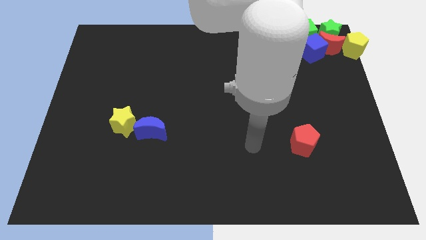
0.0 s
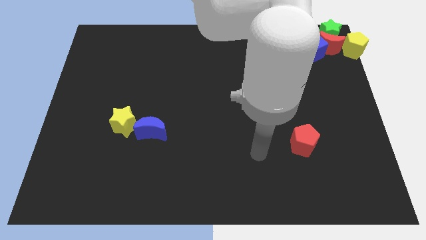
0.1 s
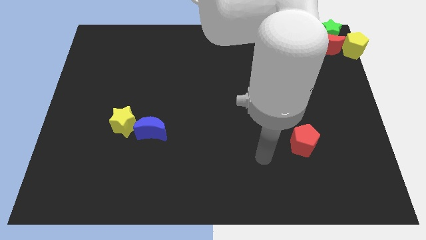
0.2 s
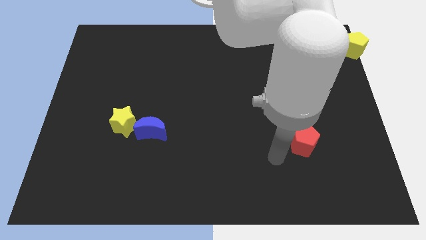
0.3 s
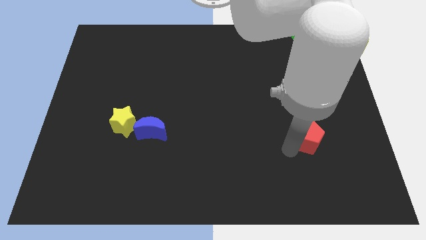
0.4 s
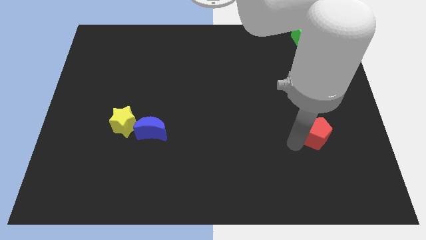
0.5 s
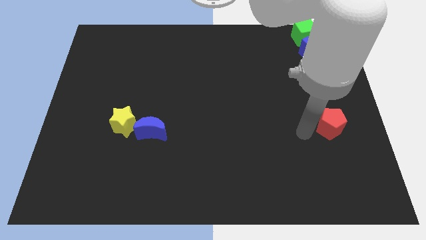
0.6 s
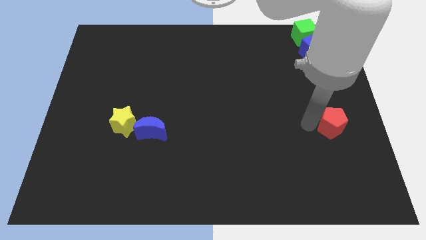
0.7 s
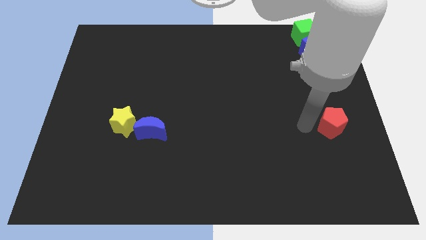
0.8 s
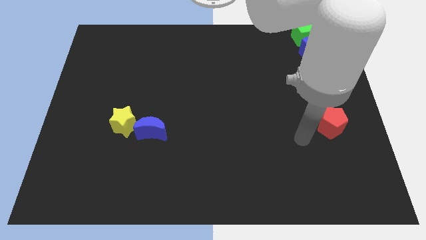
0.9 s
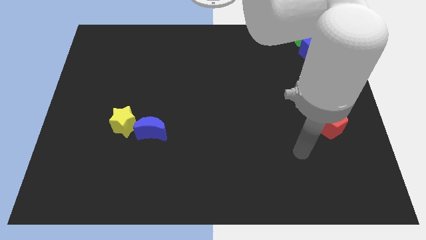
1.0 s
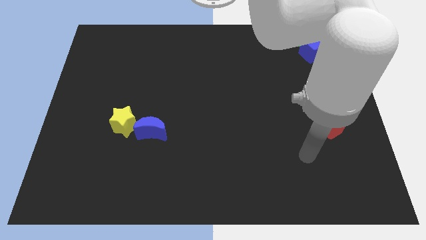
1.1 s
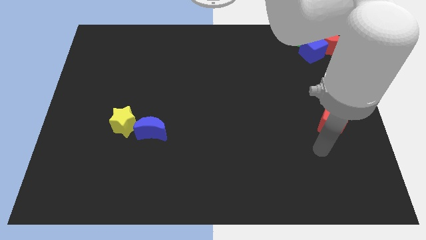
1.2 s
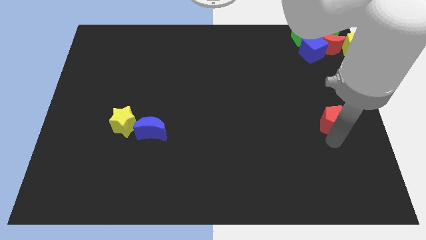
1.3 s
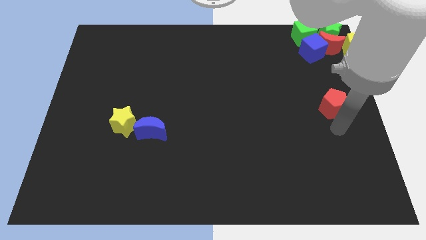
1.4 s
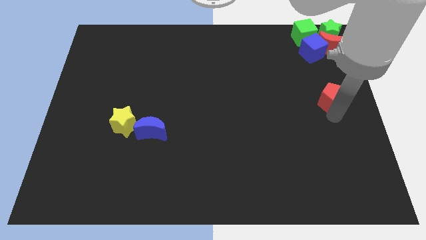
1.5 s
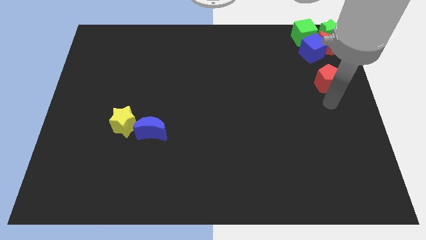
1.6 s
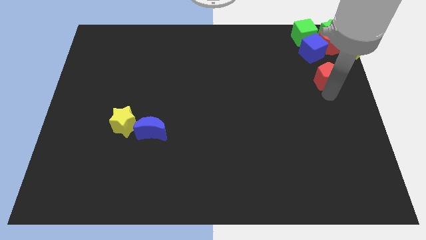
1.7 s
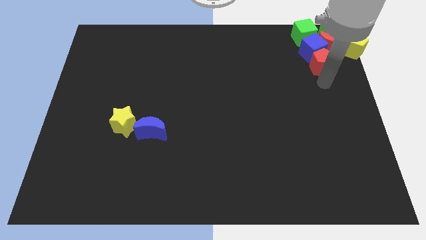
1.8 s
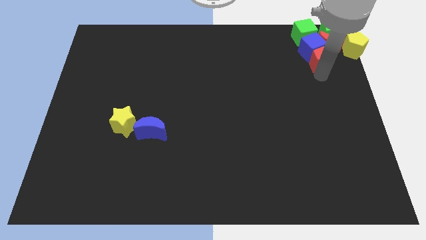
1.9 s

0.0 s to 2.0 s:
place the red pentagon close to the blue cube

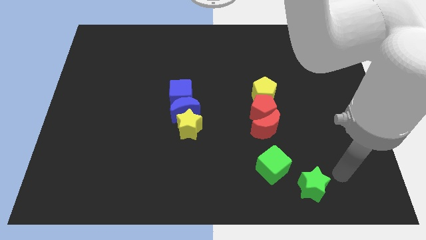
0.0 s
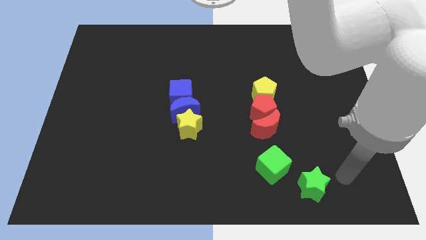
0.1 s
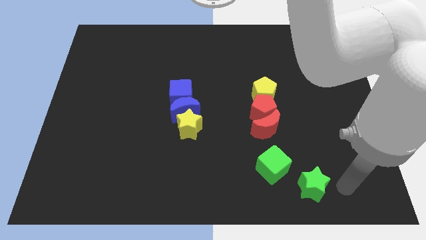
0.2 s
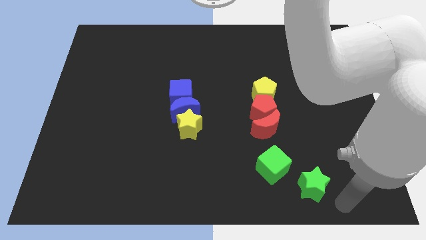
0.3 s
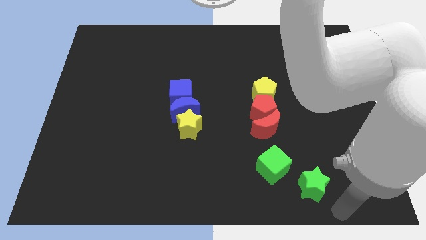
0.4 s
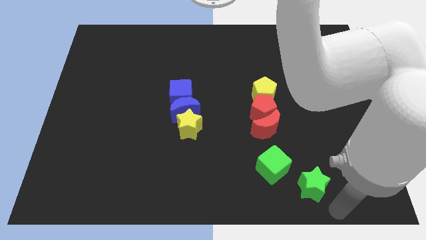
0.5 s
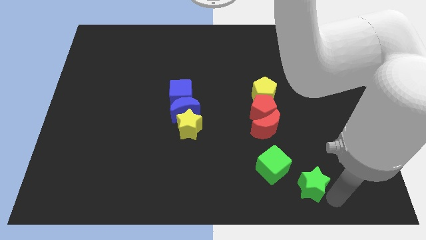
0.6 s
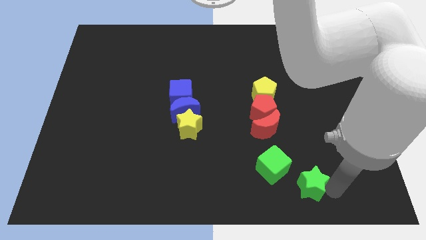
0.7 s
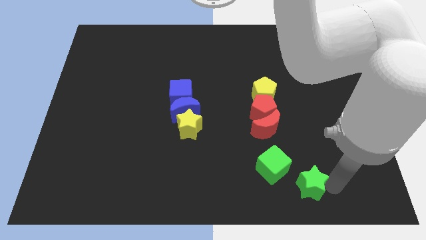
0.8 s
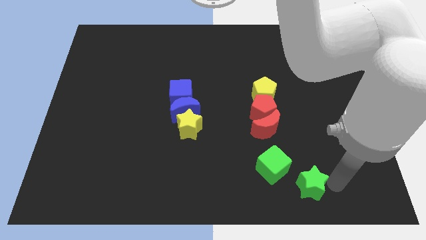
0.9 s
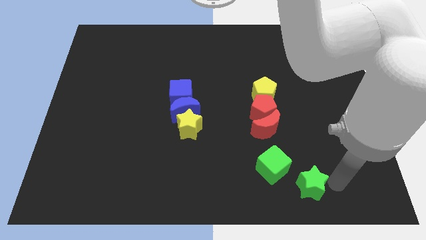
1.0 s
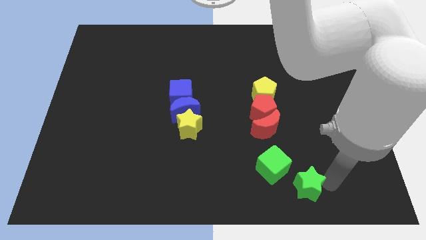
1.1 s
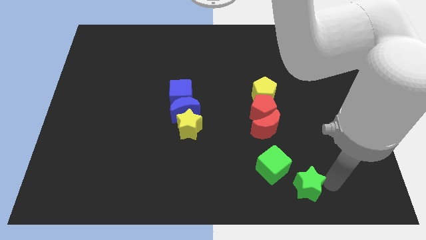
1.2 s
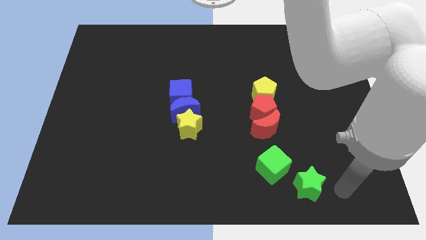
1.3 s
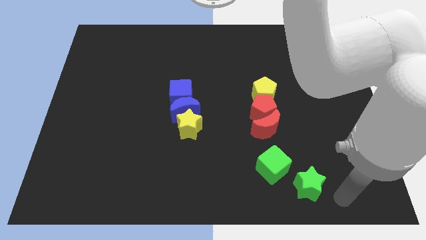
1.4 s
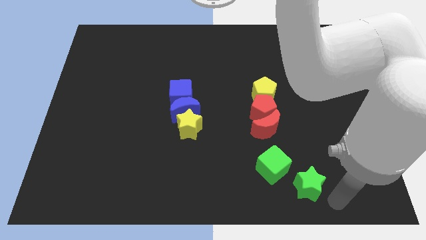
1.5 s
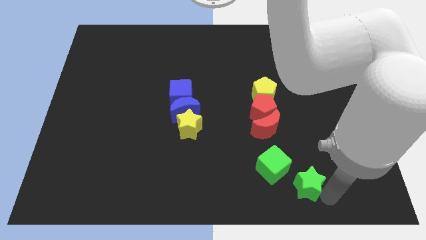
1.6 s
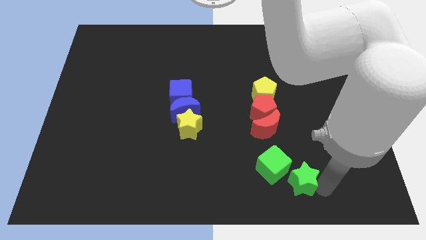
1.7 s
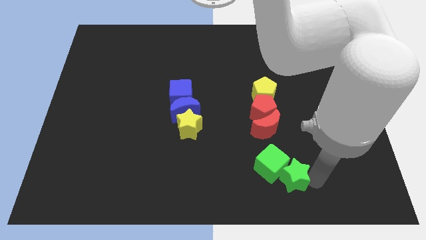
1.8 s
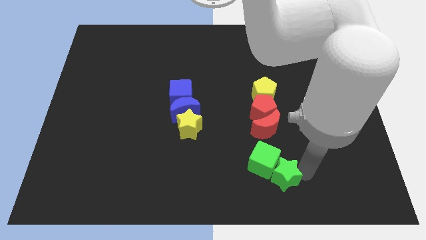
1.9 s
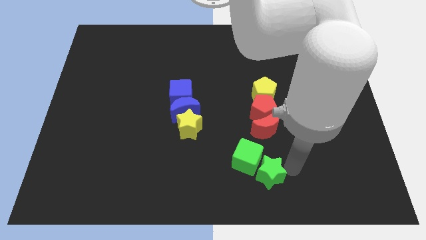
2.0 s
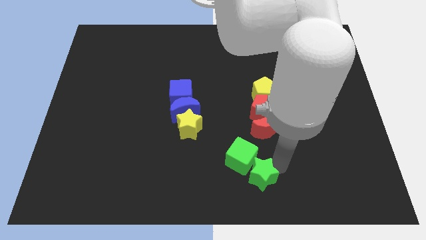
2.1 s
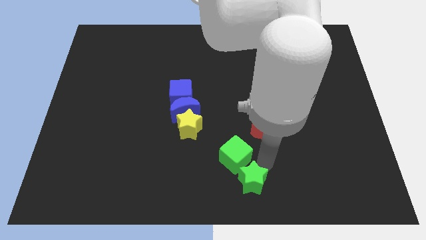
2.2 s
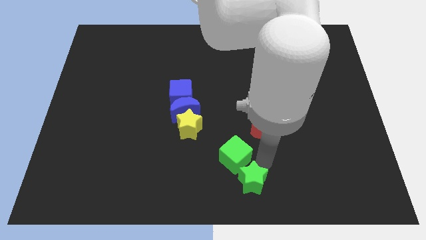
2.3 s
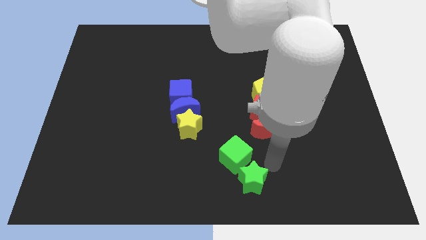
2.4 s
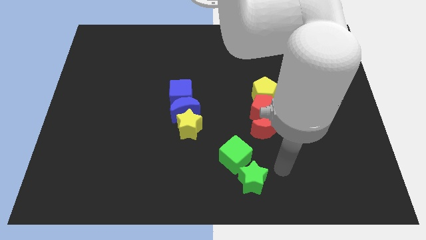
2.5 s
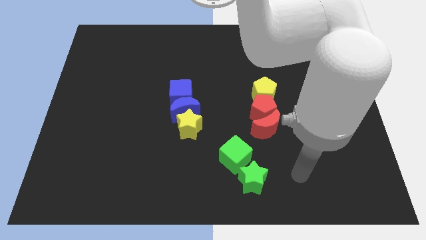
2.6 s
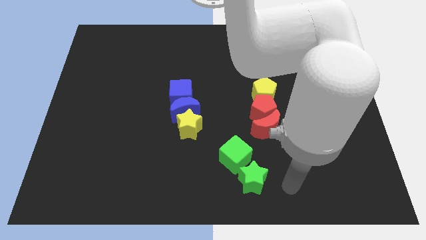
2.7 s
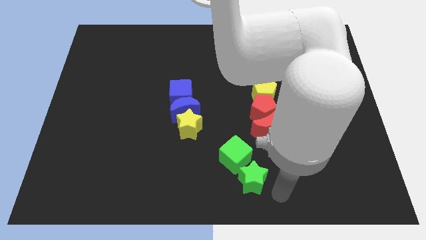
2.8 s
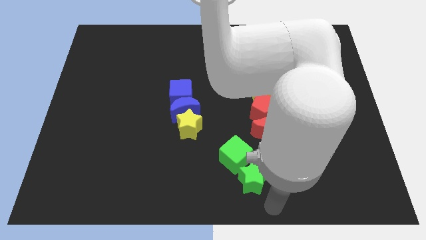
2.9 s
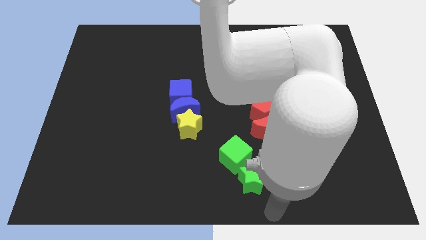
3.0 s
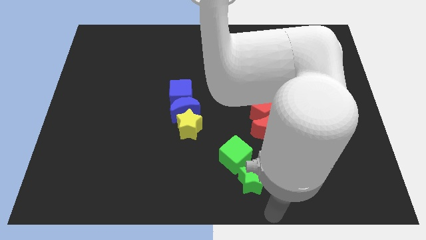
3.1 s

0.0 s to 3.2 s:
push the green star into the green cube

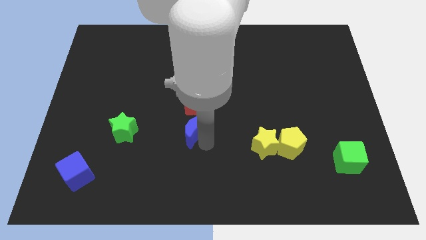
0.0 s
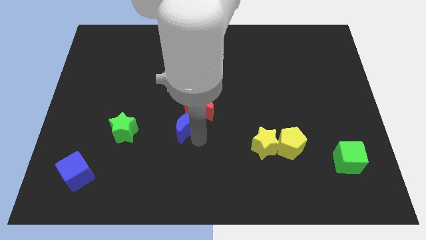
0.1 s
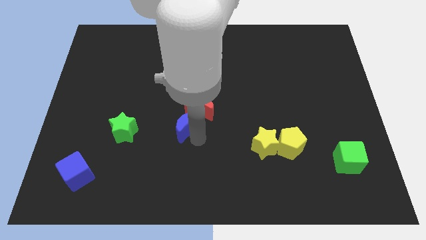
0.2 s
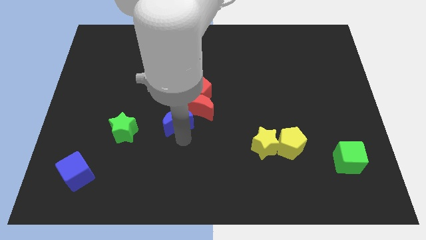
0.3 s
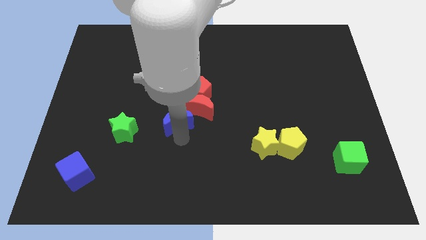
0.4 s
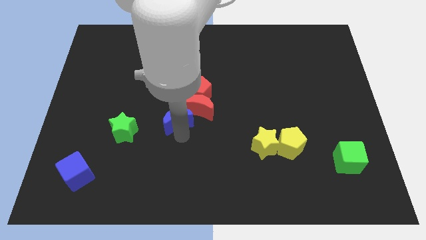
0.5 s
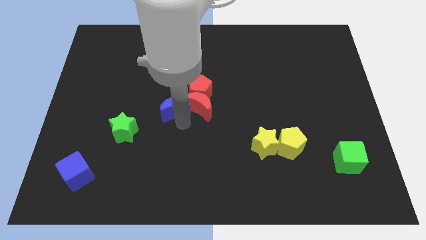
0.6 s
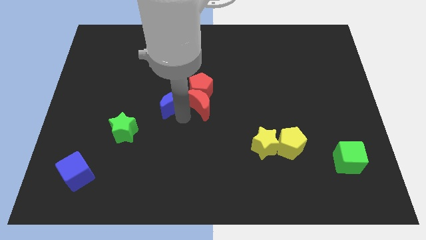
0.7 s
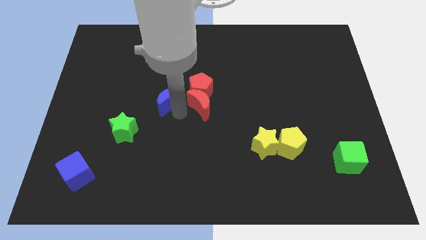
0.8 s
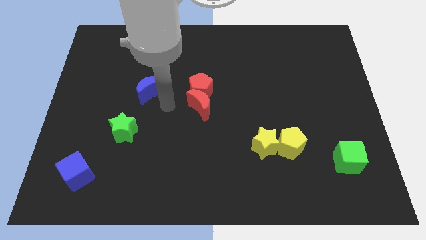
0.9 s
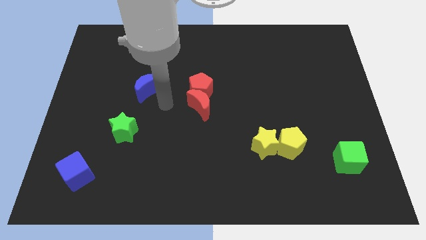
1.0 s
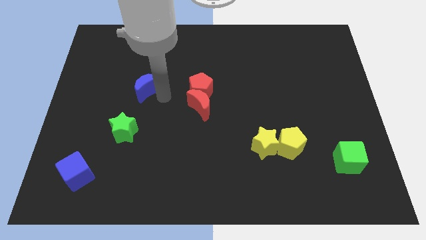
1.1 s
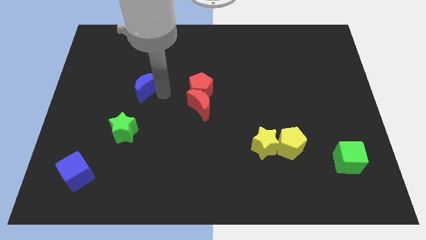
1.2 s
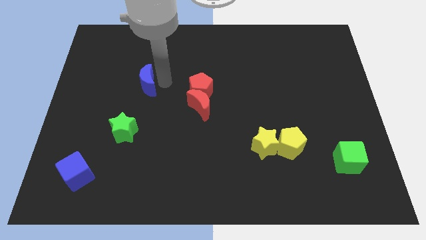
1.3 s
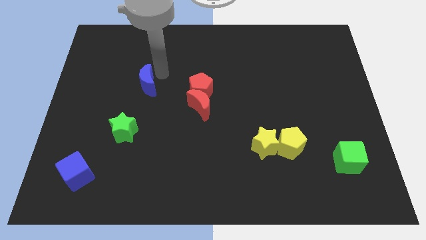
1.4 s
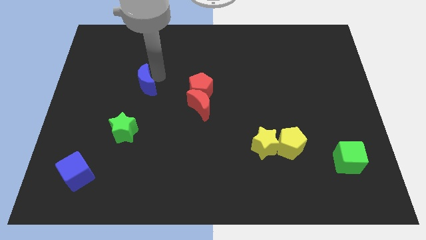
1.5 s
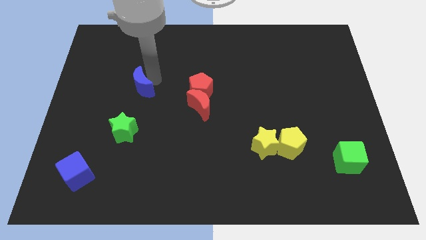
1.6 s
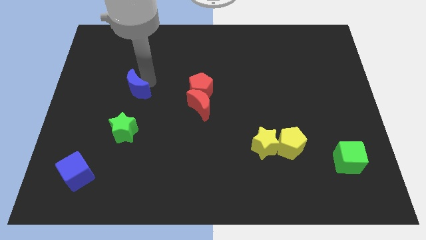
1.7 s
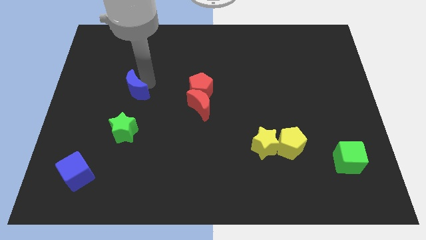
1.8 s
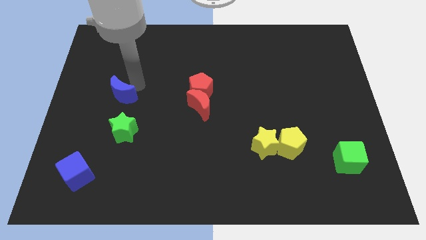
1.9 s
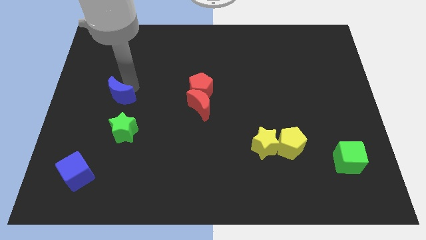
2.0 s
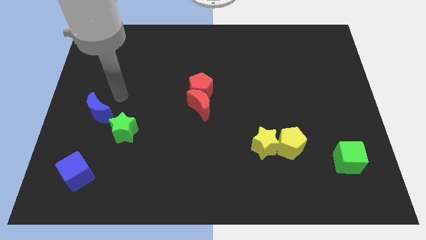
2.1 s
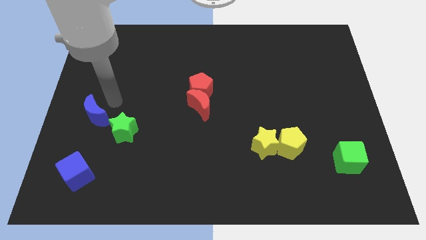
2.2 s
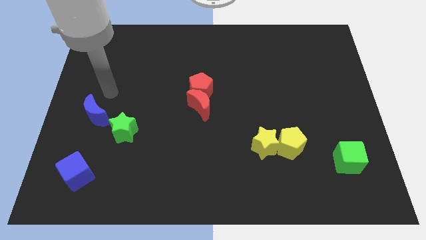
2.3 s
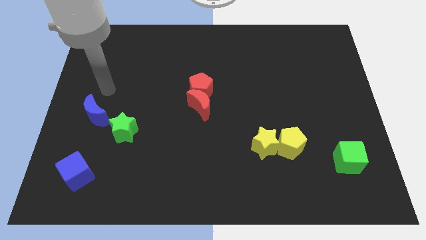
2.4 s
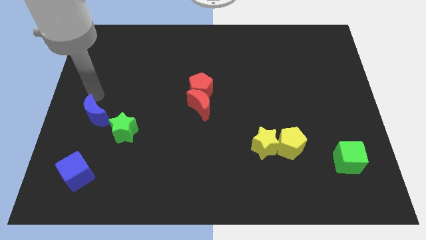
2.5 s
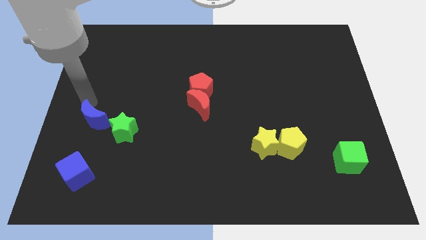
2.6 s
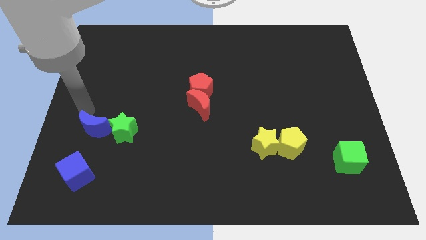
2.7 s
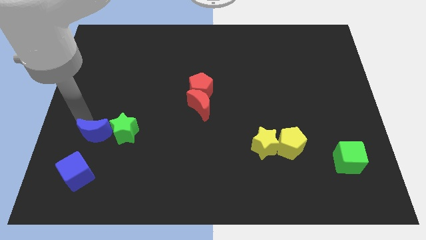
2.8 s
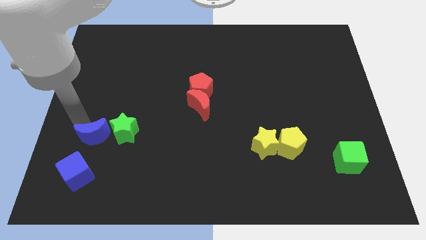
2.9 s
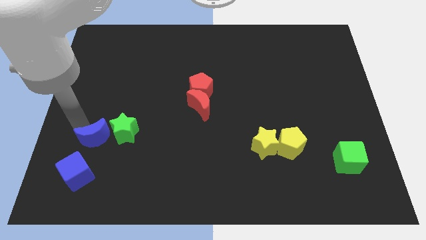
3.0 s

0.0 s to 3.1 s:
move the blue moon to the left side of the green star

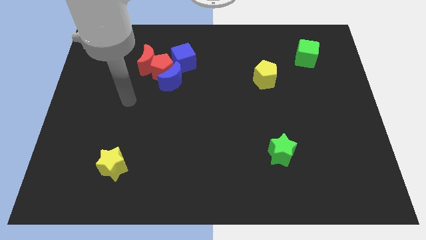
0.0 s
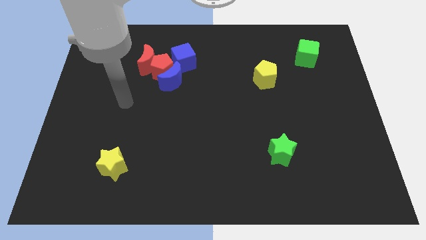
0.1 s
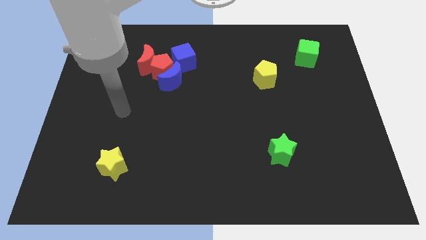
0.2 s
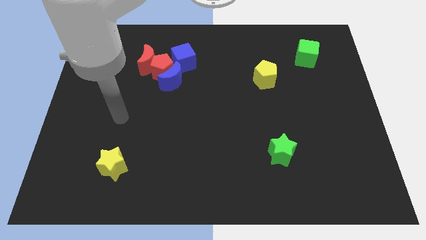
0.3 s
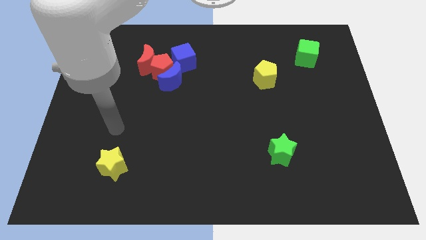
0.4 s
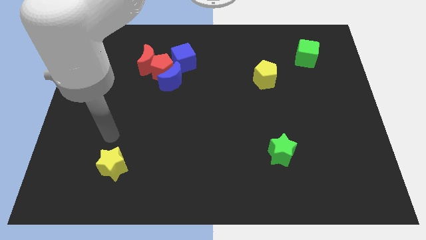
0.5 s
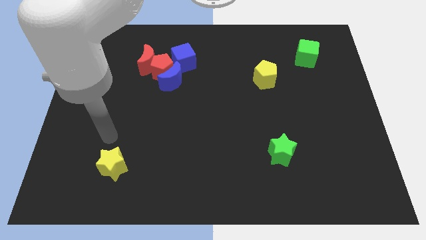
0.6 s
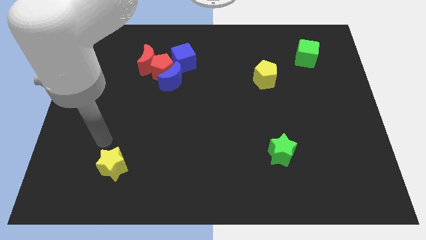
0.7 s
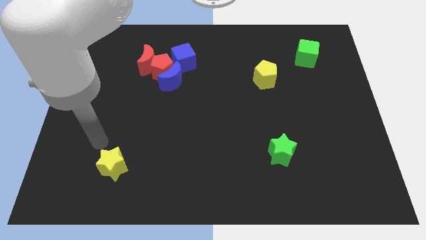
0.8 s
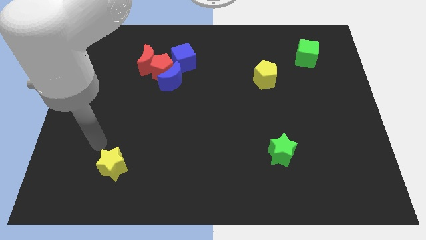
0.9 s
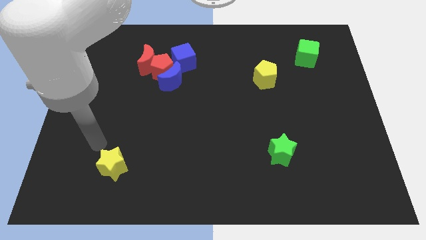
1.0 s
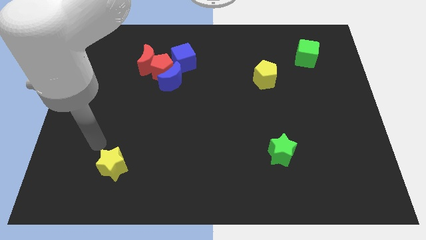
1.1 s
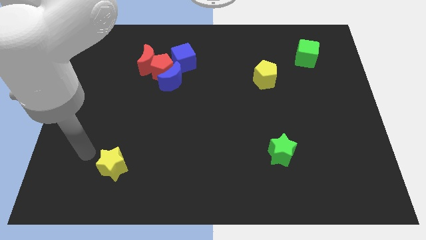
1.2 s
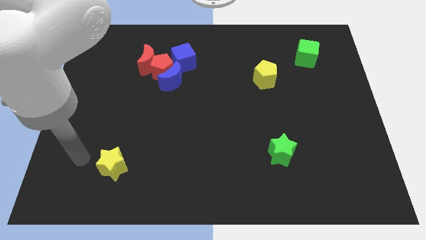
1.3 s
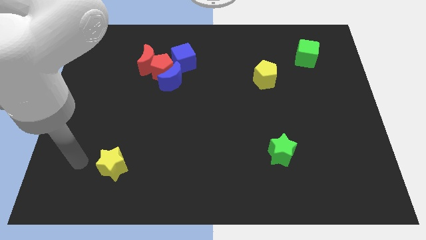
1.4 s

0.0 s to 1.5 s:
point the arm to the left of the yellow star
